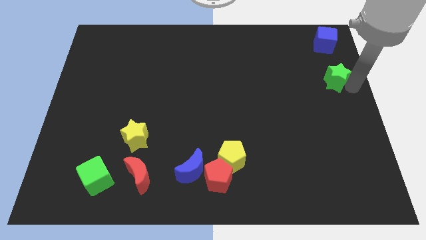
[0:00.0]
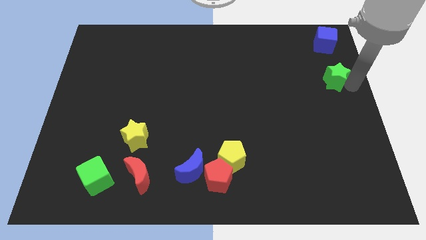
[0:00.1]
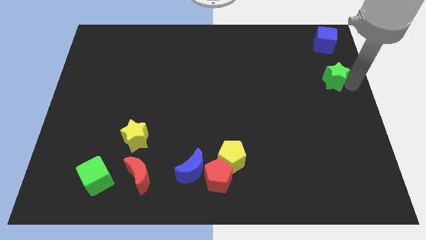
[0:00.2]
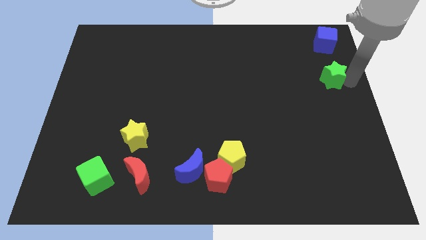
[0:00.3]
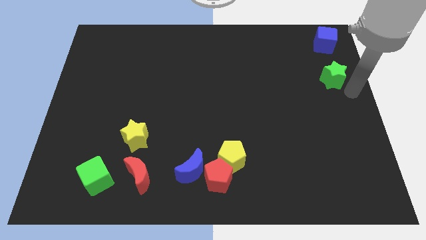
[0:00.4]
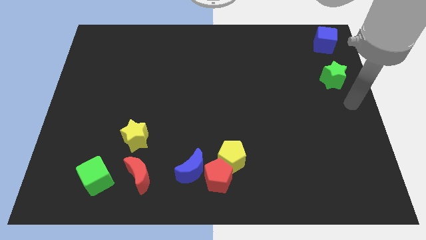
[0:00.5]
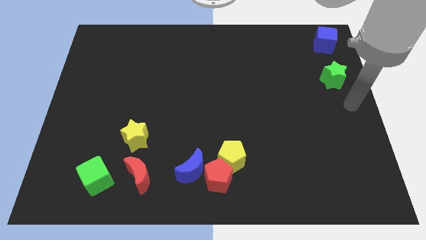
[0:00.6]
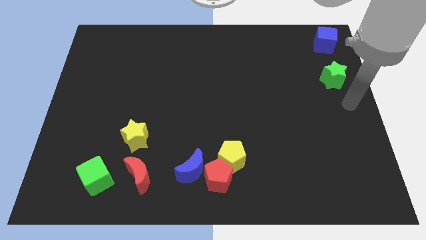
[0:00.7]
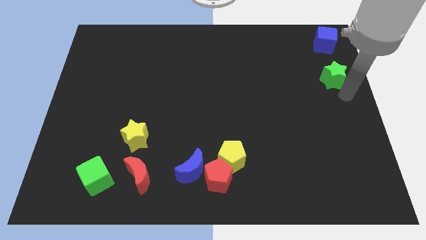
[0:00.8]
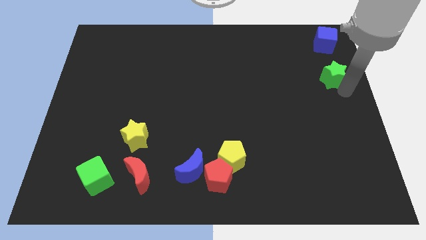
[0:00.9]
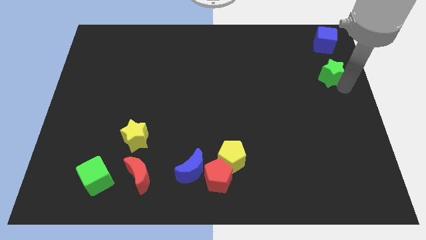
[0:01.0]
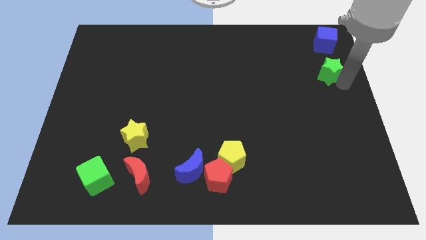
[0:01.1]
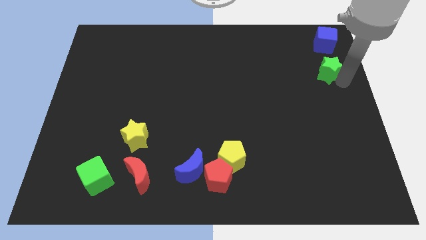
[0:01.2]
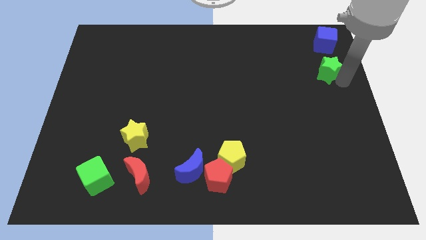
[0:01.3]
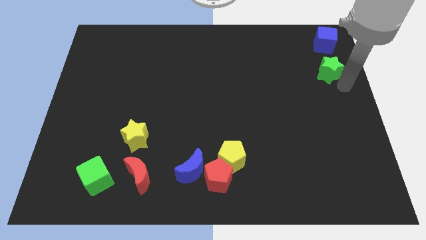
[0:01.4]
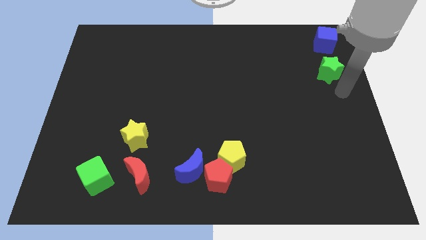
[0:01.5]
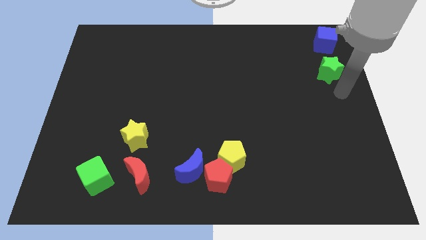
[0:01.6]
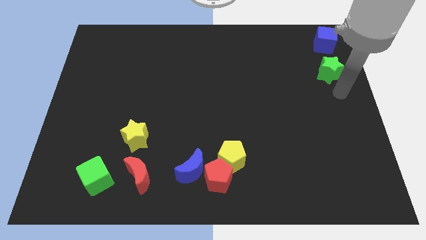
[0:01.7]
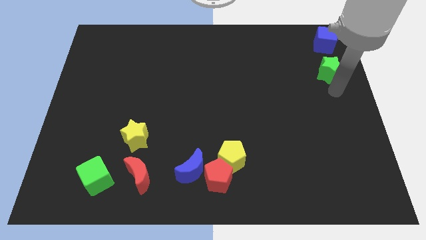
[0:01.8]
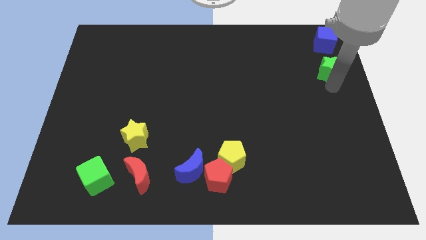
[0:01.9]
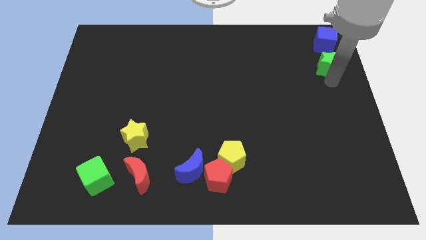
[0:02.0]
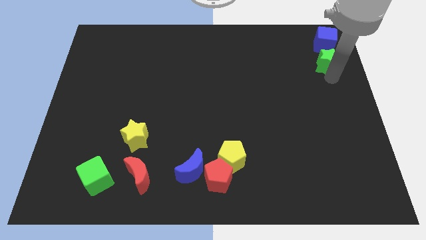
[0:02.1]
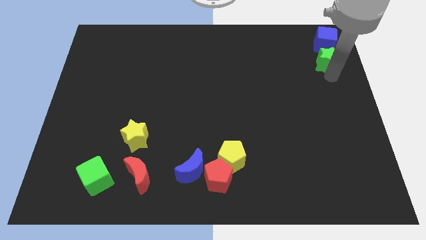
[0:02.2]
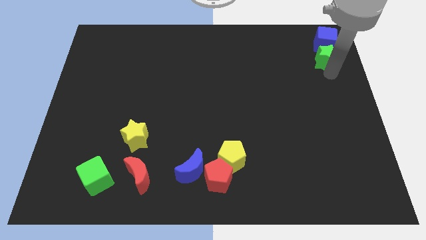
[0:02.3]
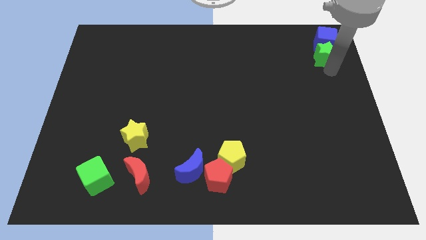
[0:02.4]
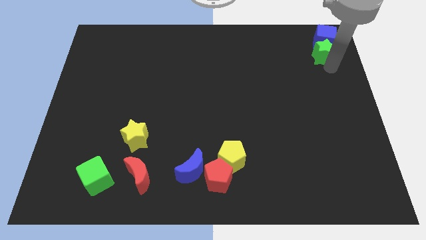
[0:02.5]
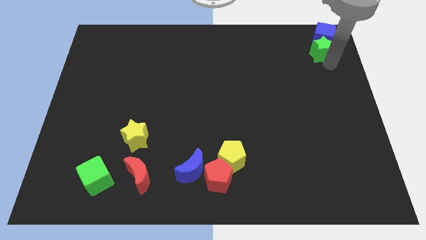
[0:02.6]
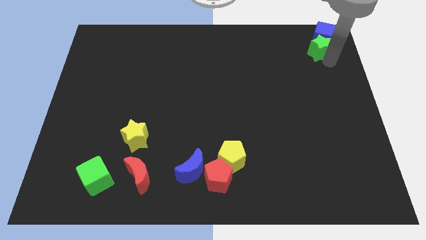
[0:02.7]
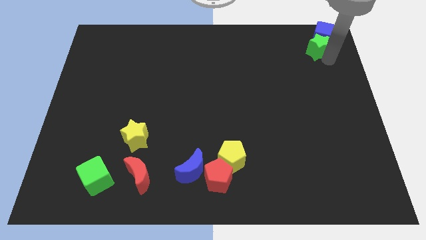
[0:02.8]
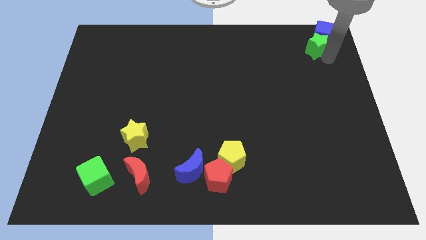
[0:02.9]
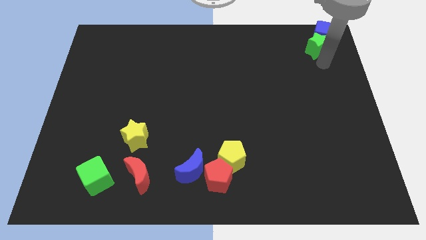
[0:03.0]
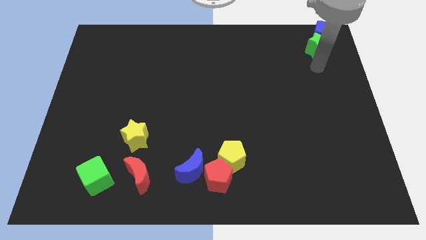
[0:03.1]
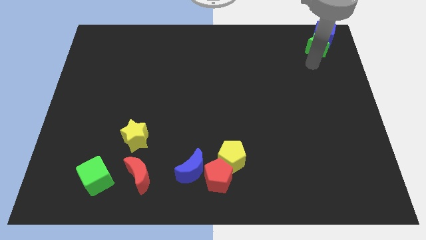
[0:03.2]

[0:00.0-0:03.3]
move the green star into the blue cube

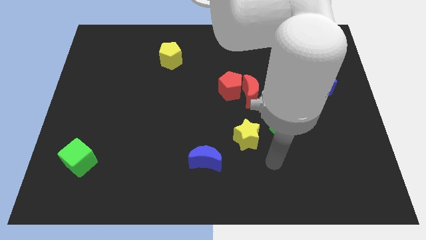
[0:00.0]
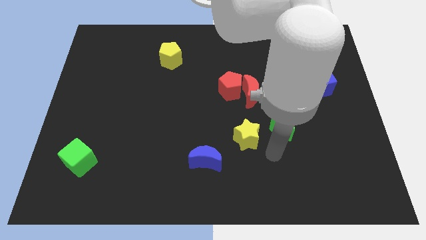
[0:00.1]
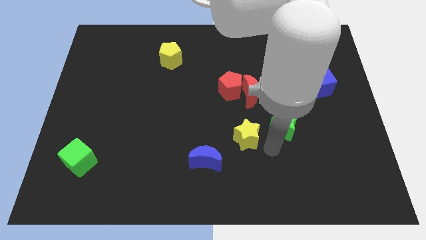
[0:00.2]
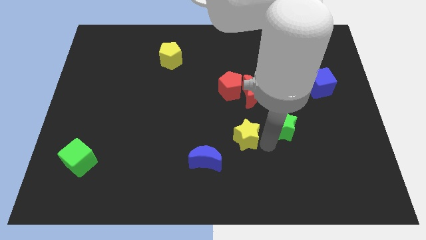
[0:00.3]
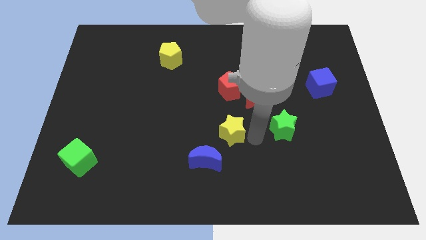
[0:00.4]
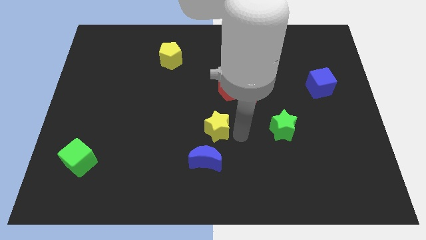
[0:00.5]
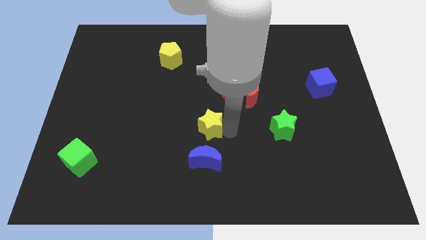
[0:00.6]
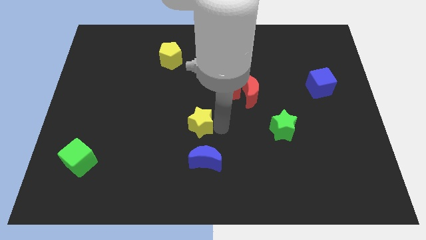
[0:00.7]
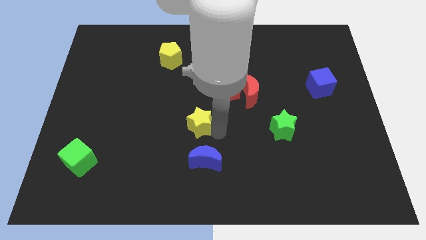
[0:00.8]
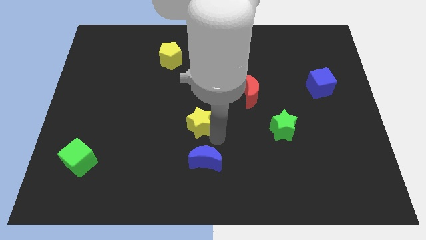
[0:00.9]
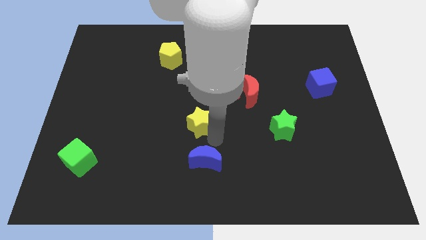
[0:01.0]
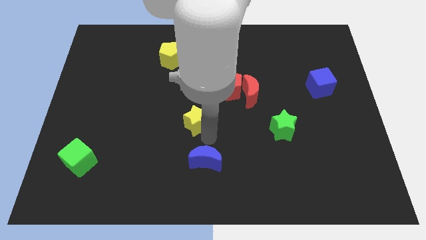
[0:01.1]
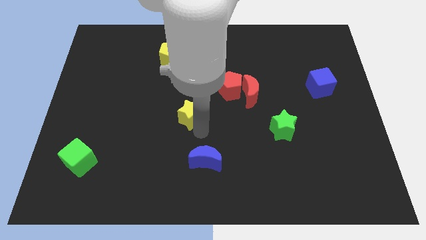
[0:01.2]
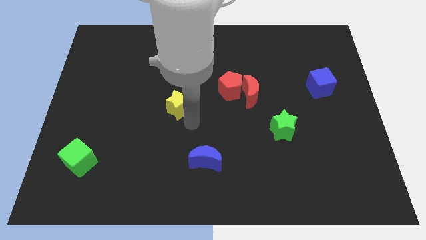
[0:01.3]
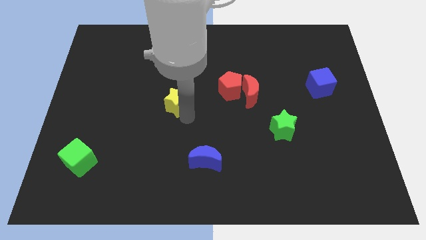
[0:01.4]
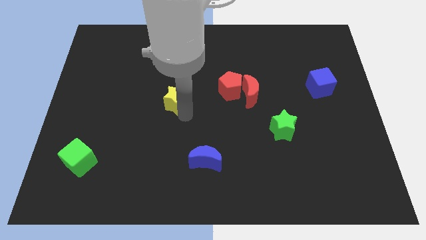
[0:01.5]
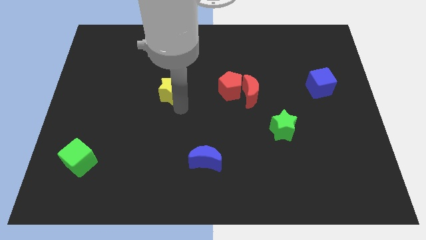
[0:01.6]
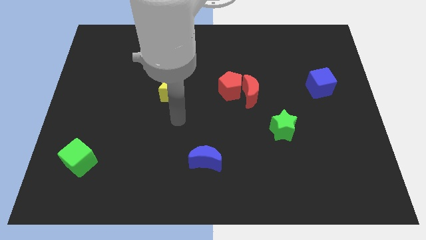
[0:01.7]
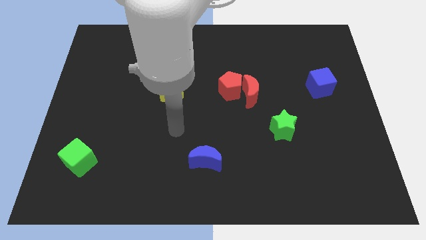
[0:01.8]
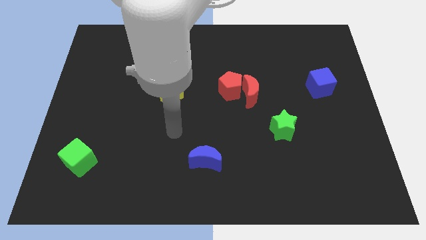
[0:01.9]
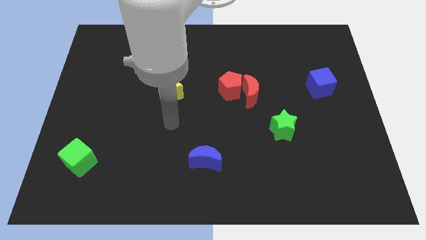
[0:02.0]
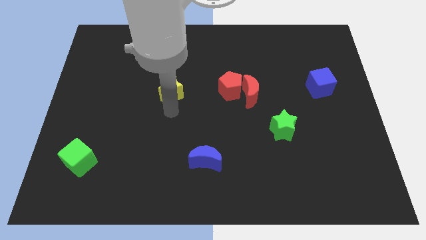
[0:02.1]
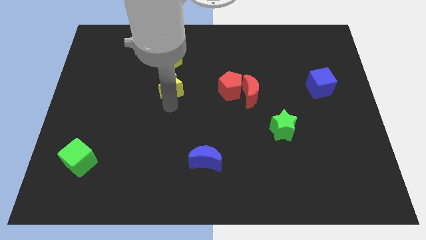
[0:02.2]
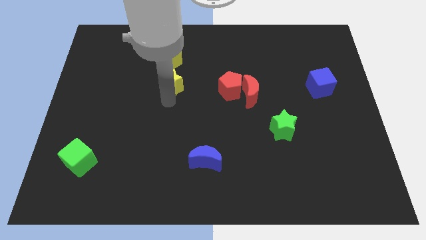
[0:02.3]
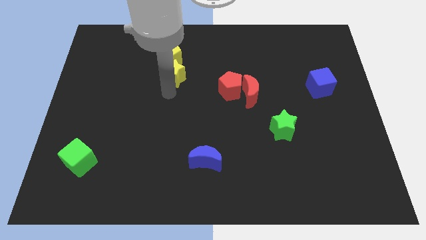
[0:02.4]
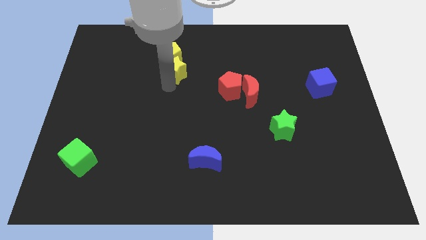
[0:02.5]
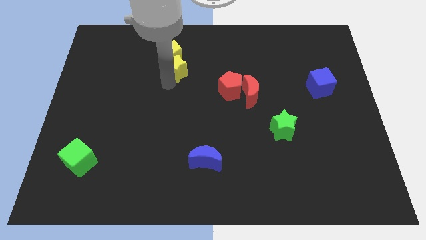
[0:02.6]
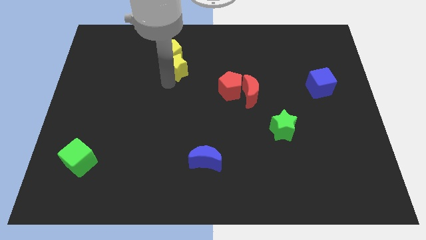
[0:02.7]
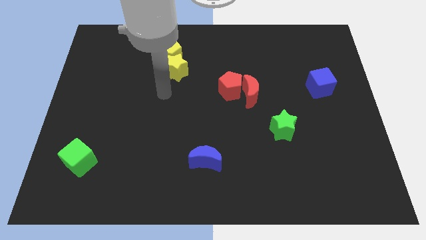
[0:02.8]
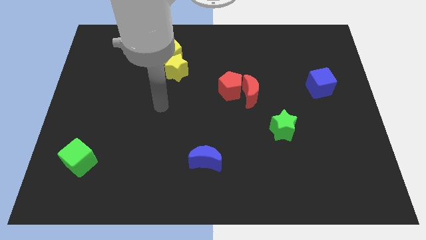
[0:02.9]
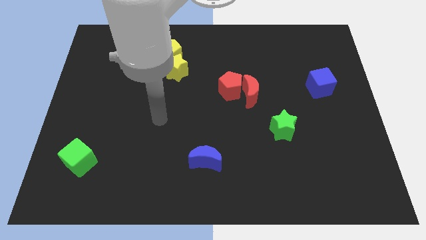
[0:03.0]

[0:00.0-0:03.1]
place the yellow star below the yellow pentagon

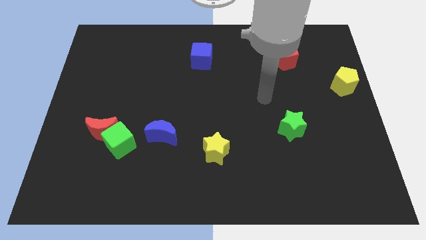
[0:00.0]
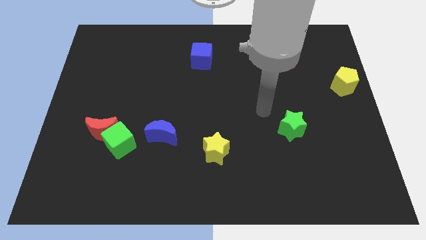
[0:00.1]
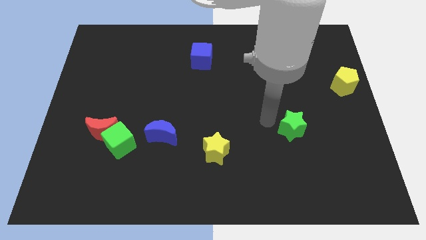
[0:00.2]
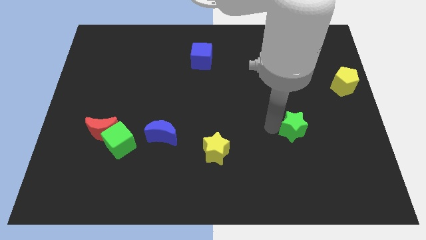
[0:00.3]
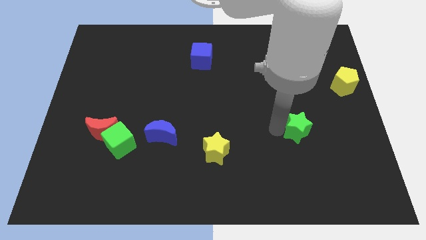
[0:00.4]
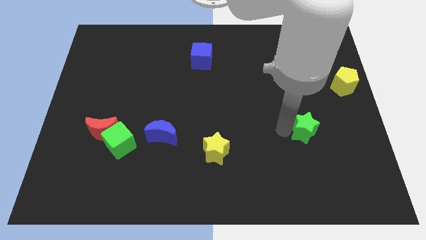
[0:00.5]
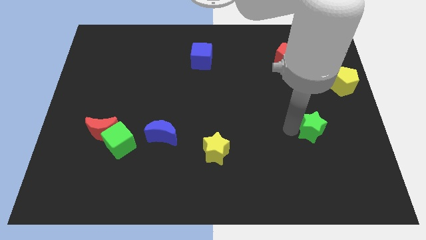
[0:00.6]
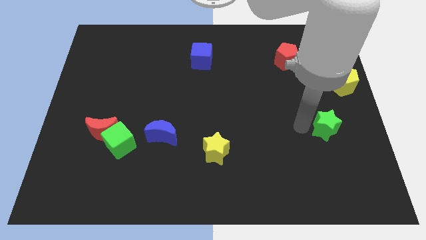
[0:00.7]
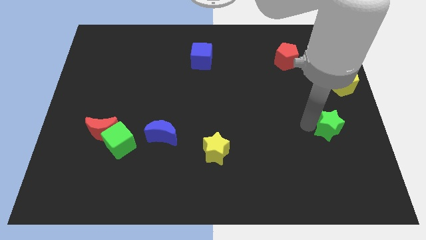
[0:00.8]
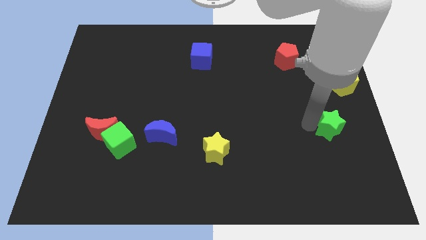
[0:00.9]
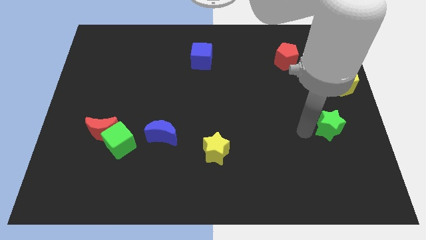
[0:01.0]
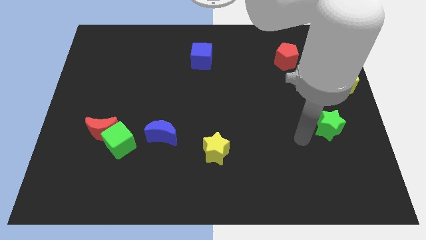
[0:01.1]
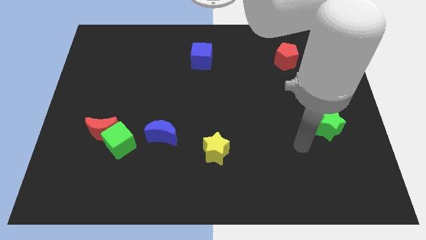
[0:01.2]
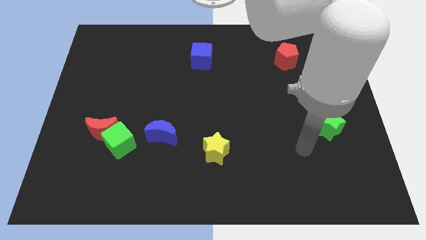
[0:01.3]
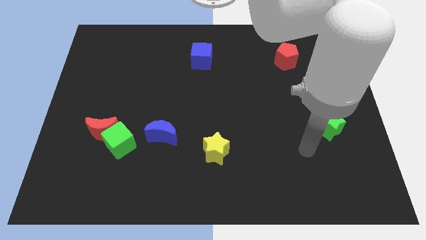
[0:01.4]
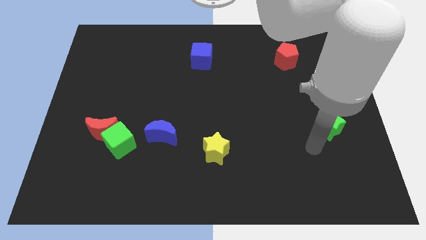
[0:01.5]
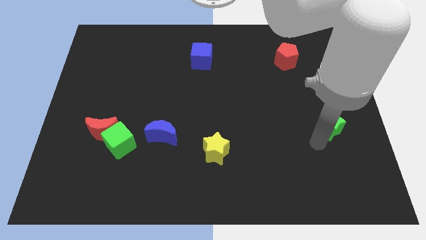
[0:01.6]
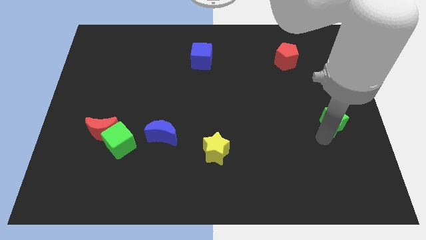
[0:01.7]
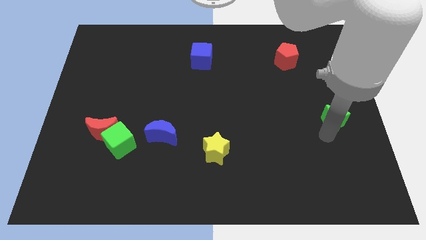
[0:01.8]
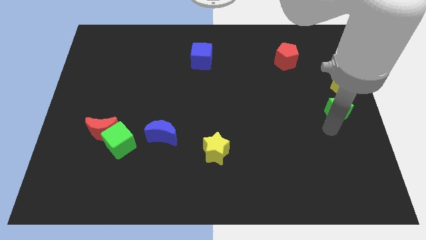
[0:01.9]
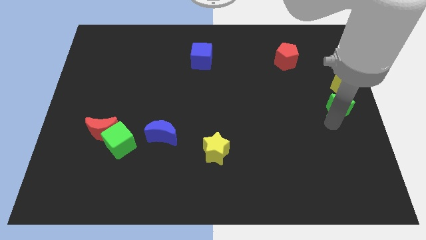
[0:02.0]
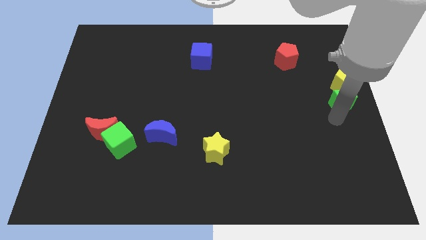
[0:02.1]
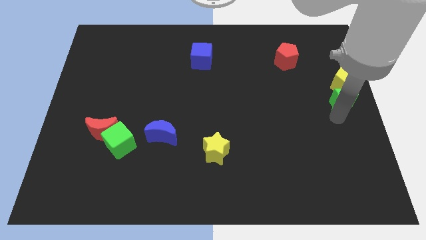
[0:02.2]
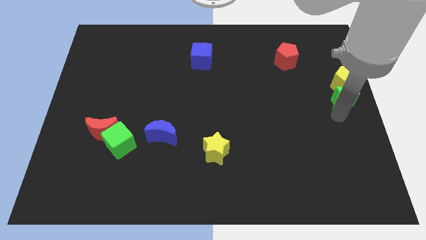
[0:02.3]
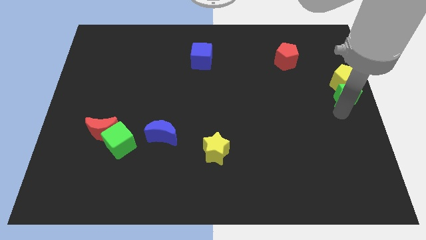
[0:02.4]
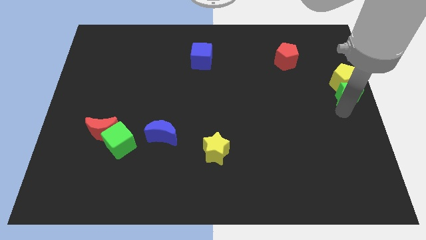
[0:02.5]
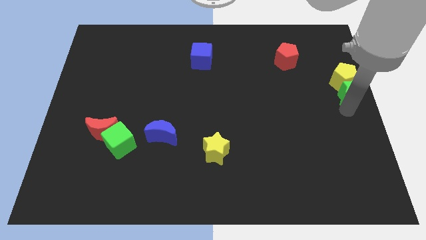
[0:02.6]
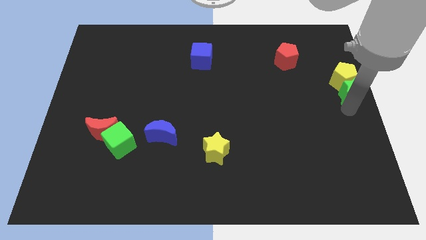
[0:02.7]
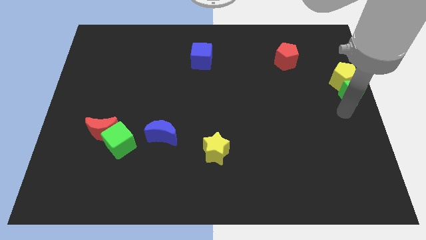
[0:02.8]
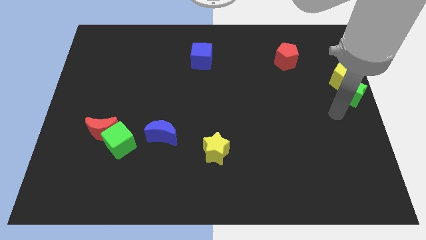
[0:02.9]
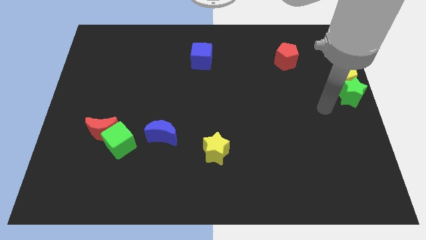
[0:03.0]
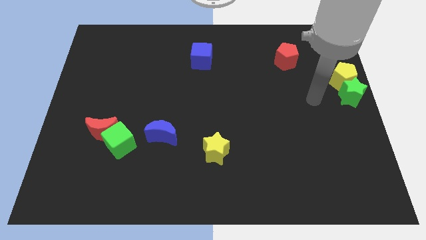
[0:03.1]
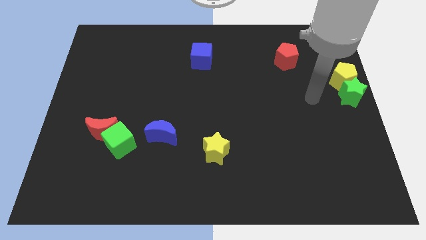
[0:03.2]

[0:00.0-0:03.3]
push the green star into the yellow pentagon
